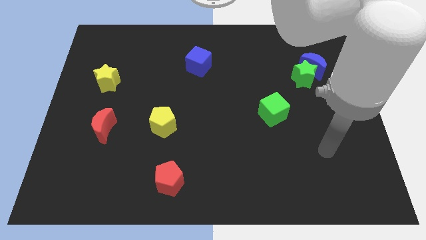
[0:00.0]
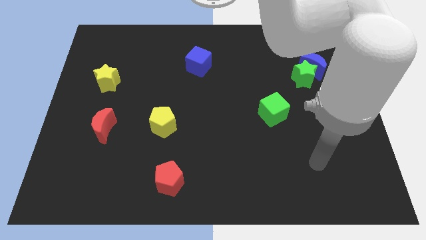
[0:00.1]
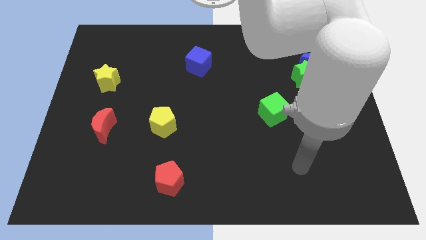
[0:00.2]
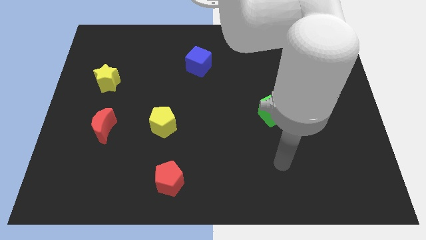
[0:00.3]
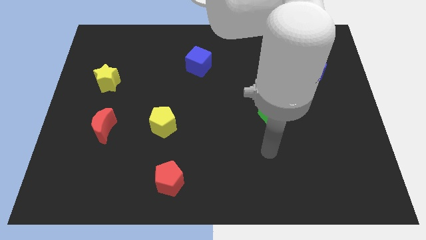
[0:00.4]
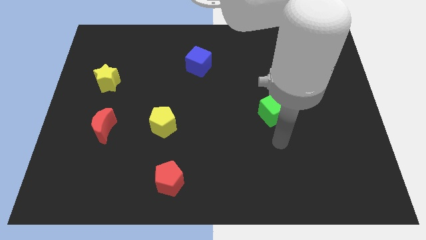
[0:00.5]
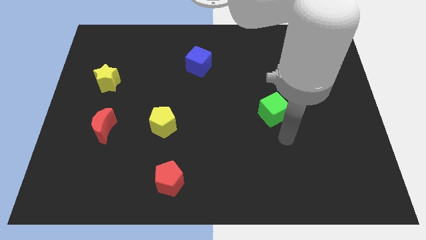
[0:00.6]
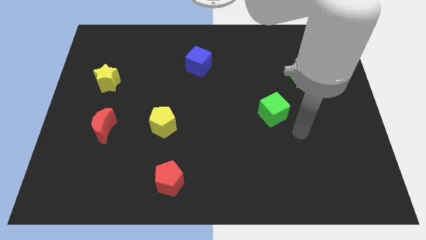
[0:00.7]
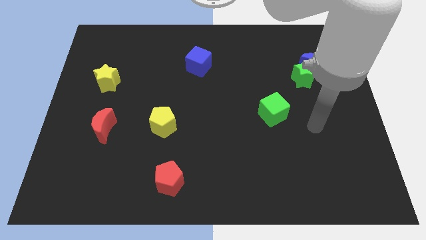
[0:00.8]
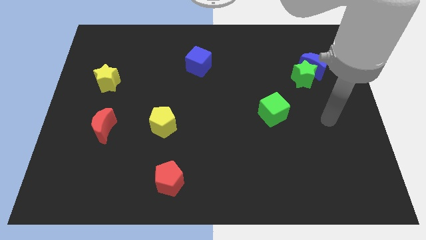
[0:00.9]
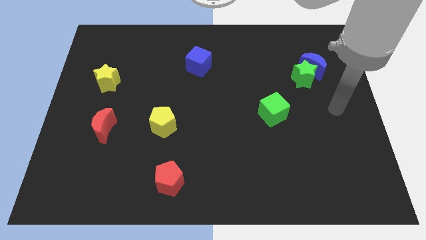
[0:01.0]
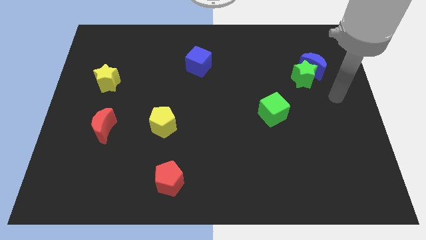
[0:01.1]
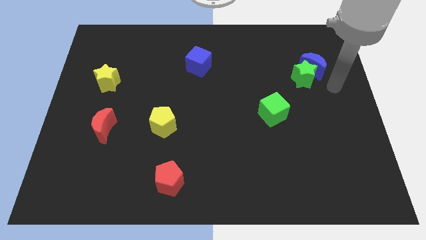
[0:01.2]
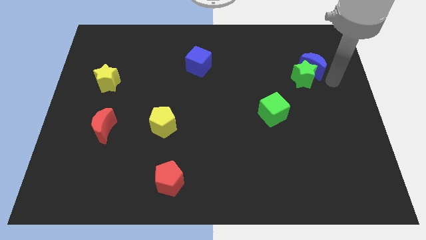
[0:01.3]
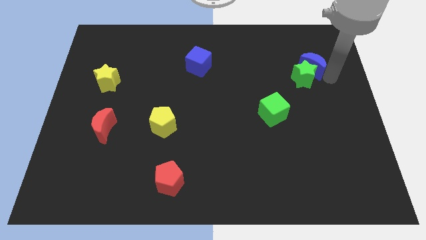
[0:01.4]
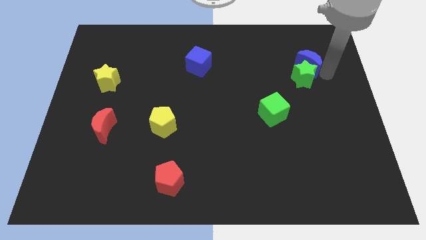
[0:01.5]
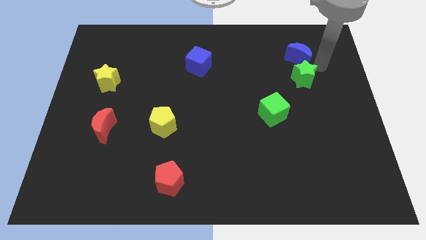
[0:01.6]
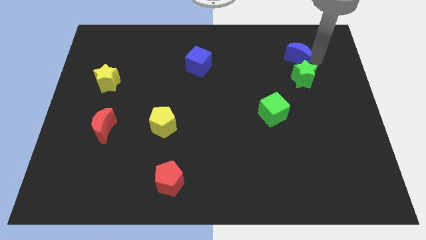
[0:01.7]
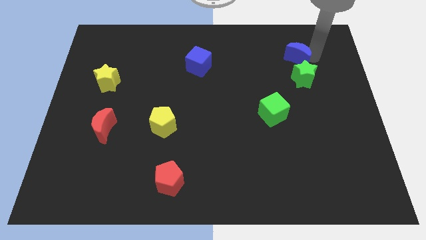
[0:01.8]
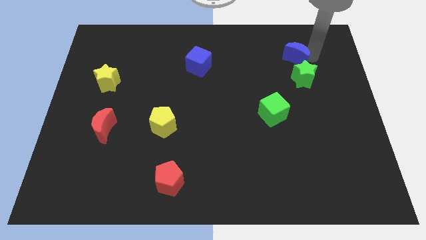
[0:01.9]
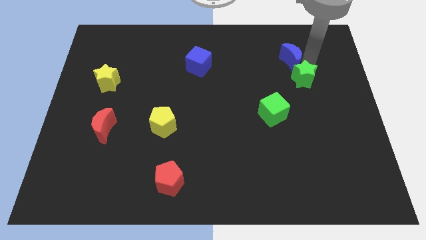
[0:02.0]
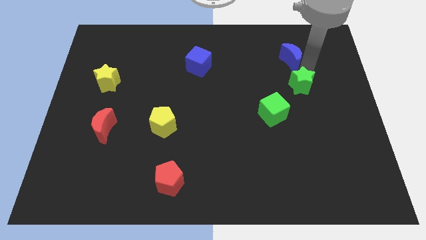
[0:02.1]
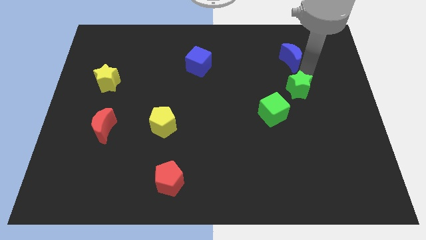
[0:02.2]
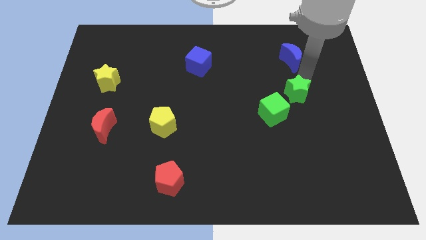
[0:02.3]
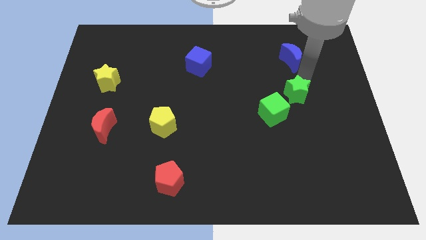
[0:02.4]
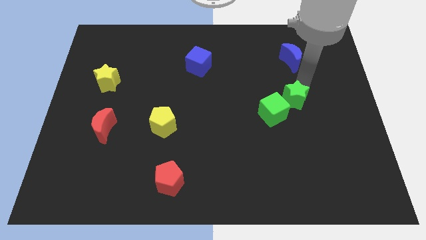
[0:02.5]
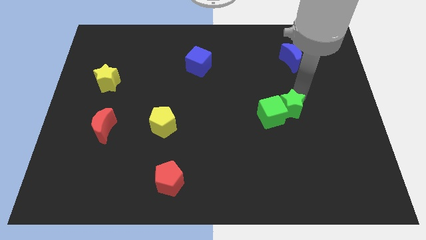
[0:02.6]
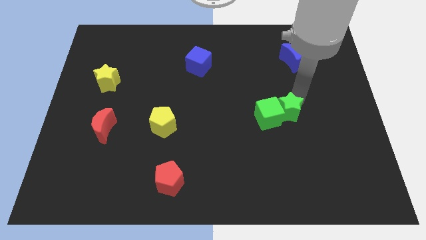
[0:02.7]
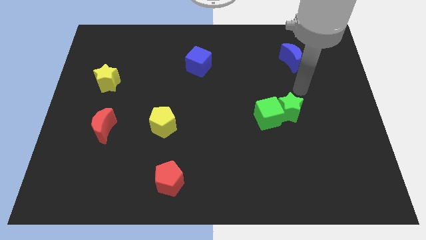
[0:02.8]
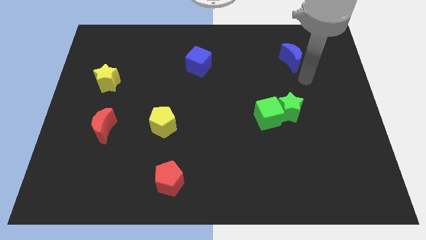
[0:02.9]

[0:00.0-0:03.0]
separate the green star from the blue moon

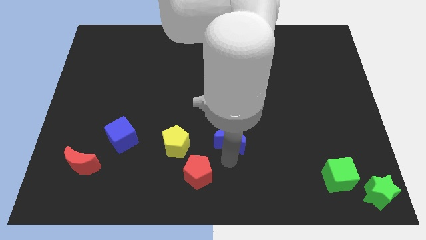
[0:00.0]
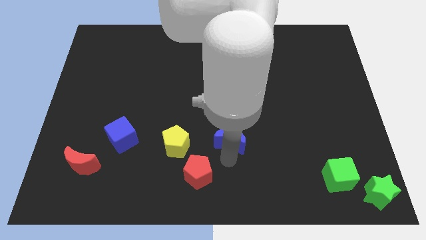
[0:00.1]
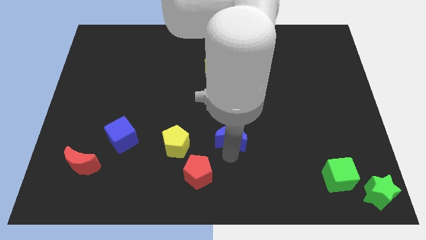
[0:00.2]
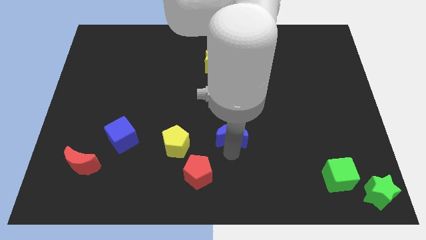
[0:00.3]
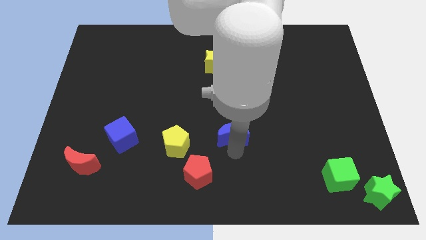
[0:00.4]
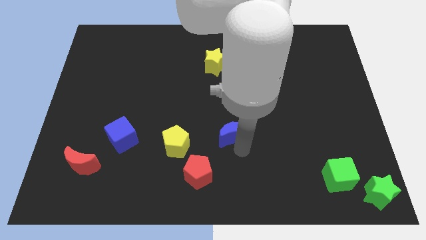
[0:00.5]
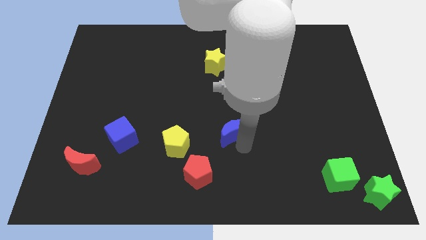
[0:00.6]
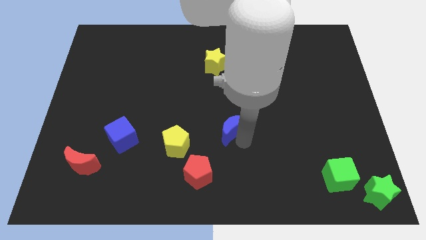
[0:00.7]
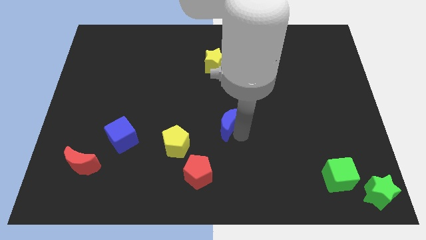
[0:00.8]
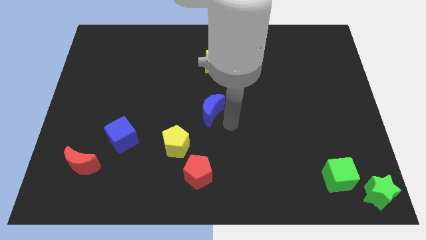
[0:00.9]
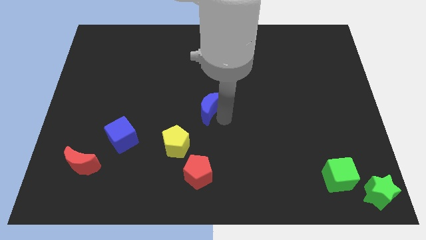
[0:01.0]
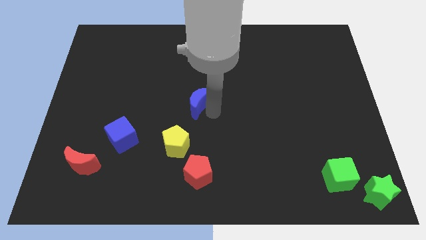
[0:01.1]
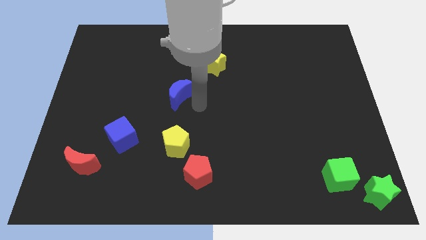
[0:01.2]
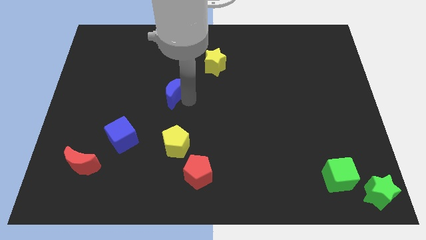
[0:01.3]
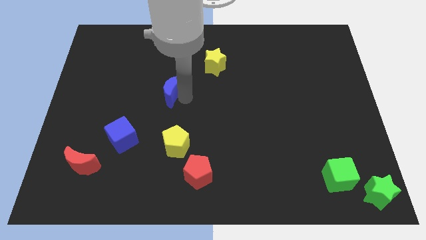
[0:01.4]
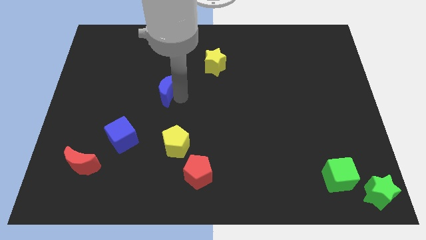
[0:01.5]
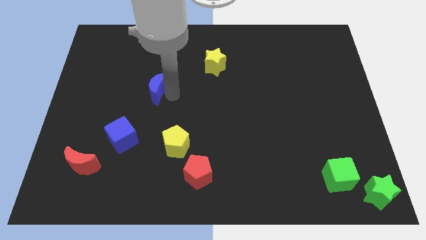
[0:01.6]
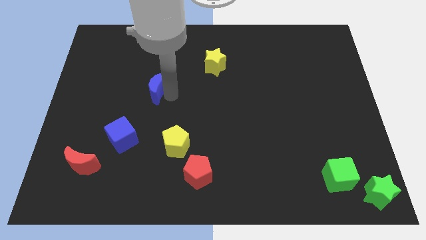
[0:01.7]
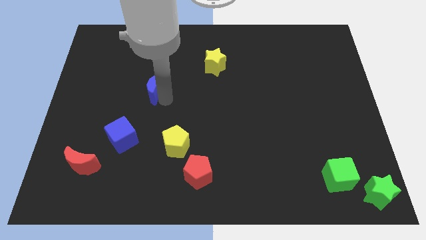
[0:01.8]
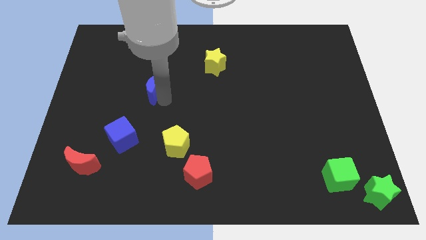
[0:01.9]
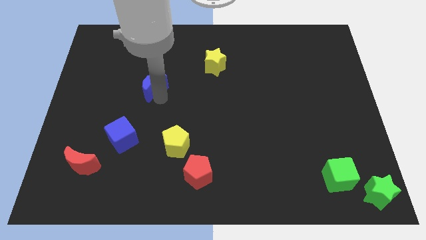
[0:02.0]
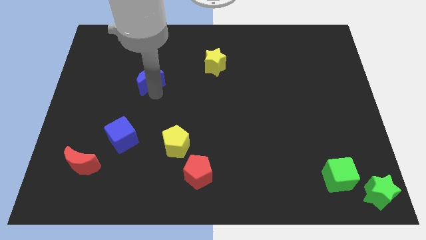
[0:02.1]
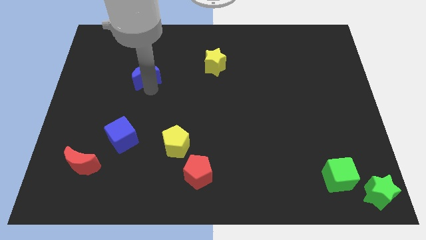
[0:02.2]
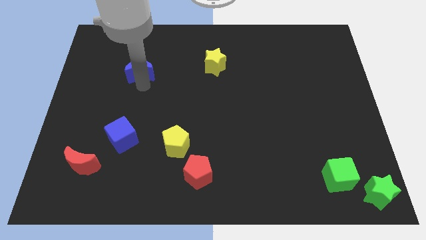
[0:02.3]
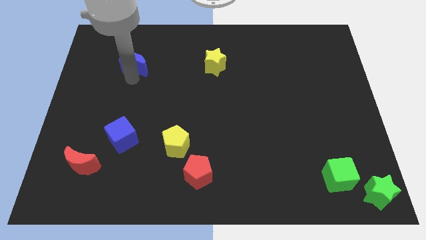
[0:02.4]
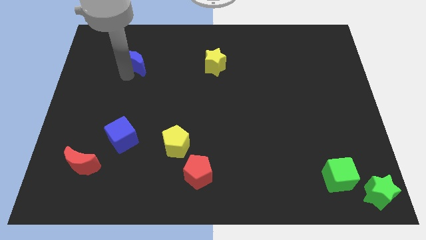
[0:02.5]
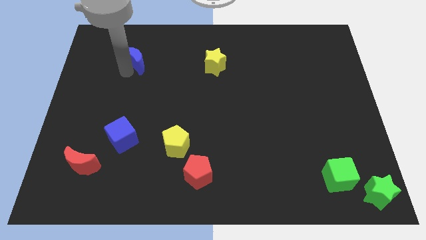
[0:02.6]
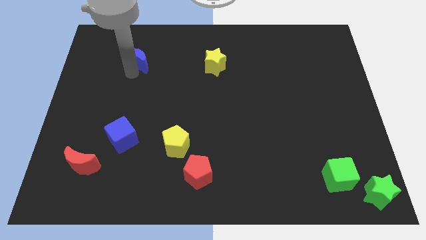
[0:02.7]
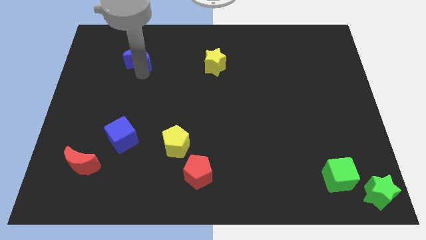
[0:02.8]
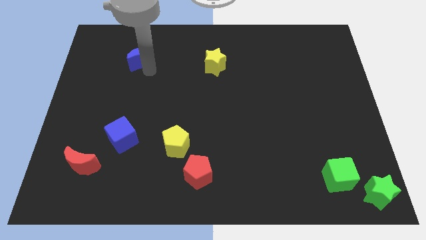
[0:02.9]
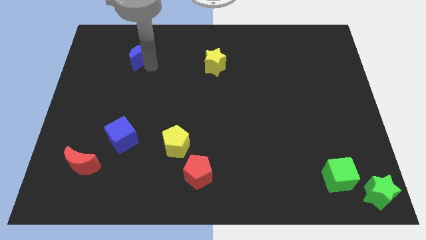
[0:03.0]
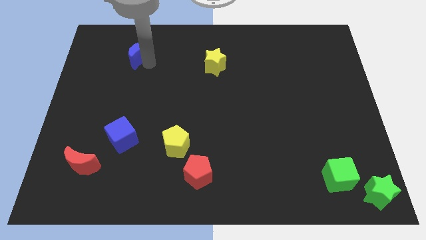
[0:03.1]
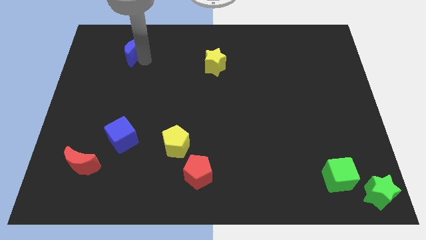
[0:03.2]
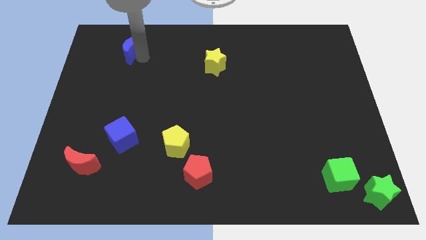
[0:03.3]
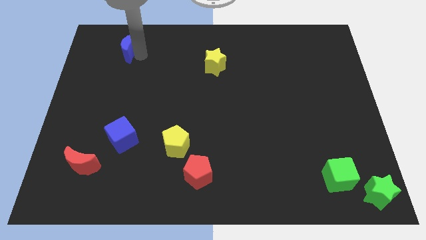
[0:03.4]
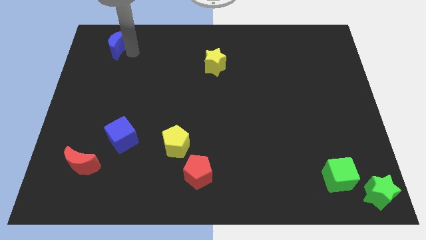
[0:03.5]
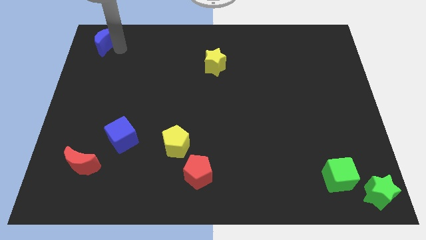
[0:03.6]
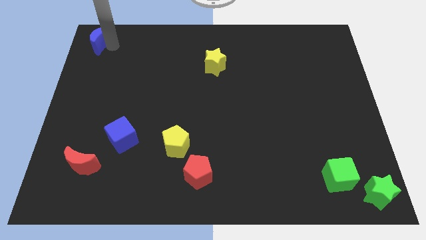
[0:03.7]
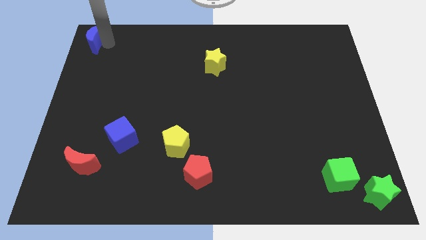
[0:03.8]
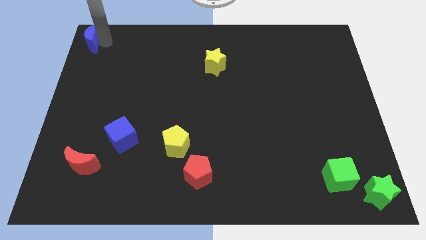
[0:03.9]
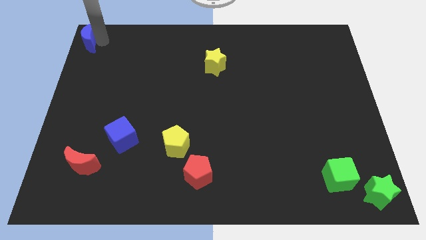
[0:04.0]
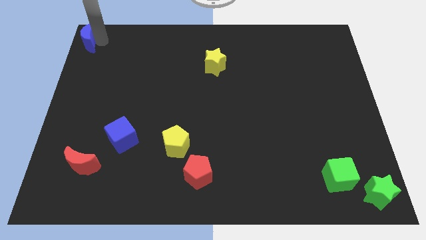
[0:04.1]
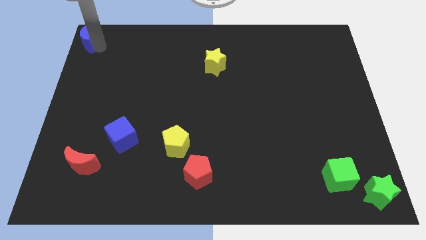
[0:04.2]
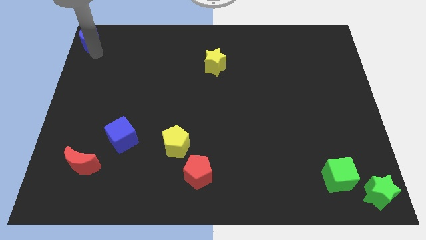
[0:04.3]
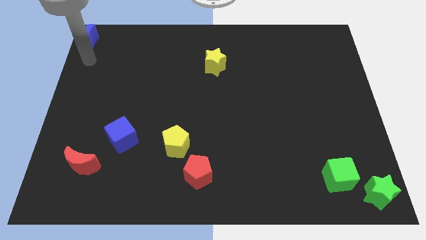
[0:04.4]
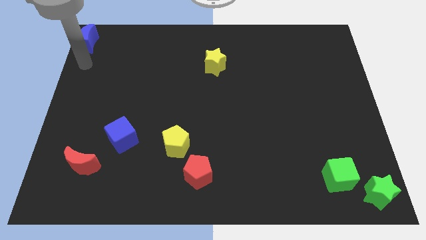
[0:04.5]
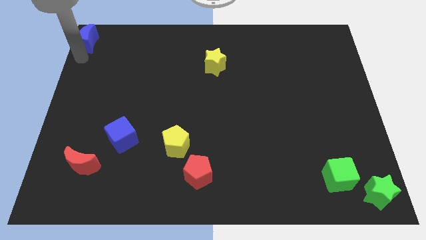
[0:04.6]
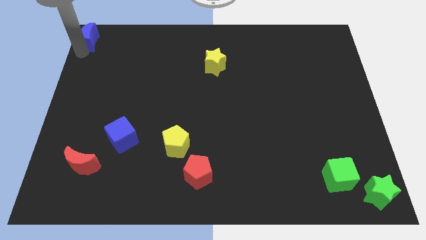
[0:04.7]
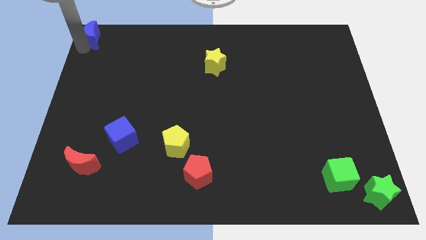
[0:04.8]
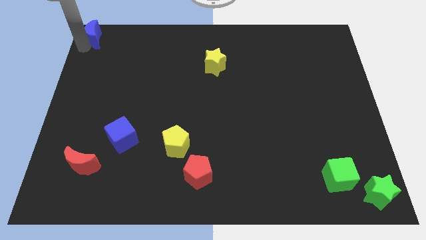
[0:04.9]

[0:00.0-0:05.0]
push the blue moon towards the top left corner of the board

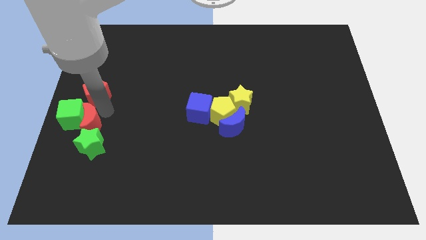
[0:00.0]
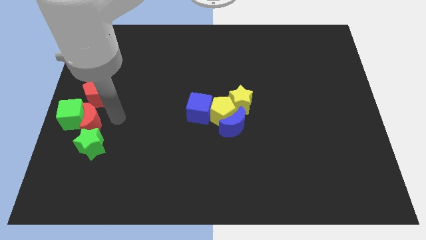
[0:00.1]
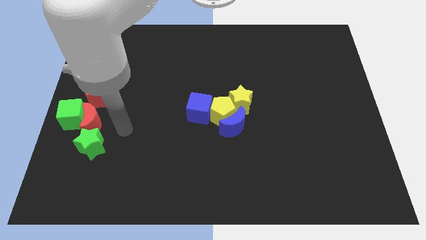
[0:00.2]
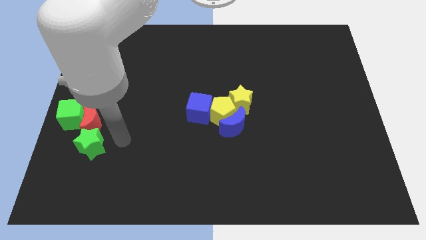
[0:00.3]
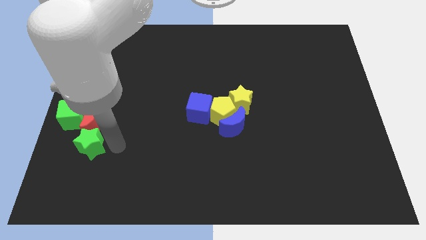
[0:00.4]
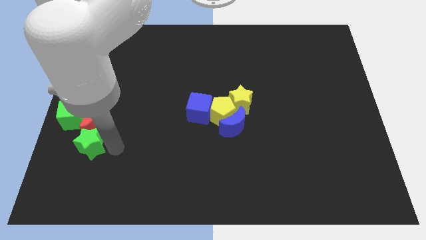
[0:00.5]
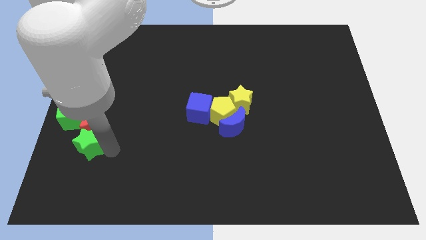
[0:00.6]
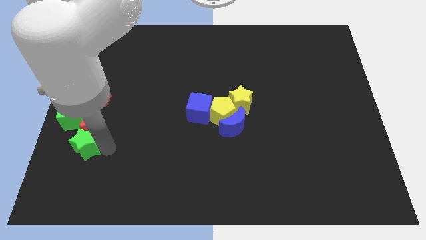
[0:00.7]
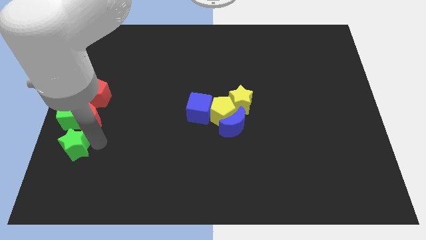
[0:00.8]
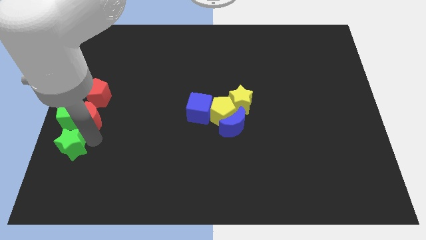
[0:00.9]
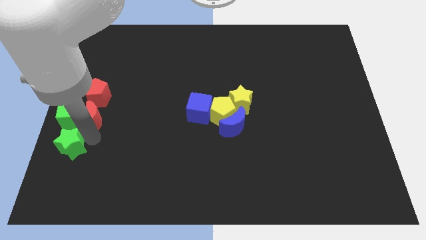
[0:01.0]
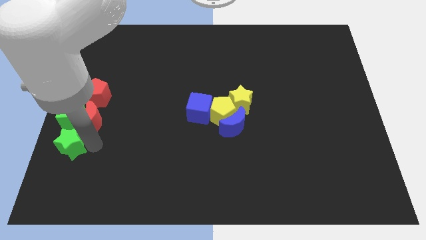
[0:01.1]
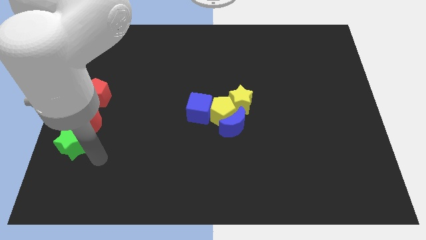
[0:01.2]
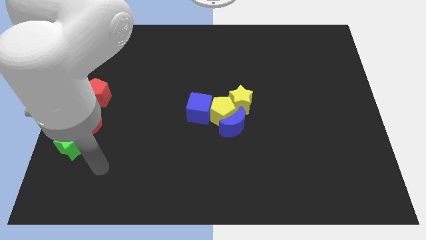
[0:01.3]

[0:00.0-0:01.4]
place the green star down to the green cube
